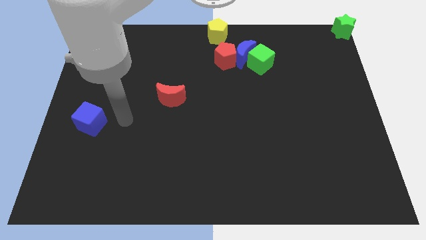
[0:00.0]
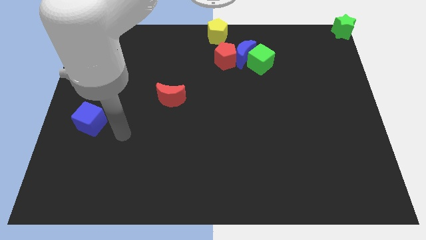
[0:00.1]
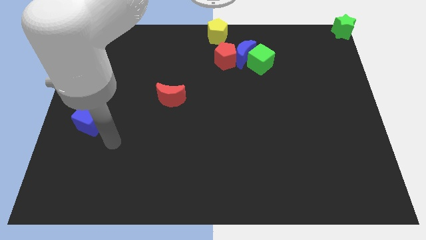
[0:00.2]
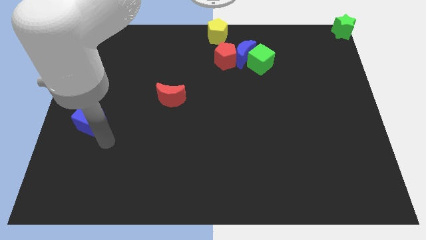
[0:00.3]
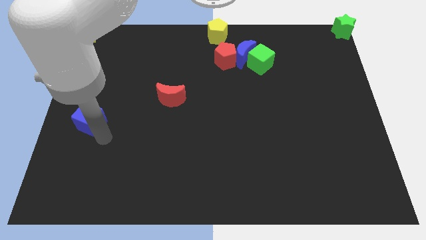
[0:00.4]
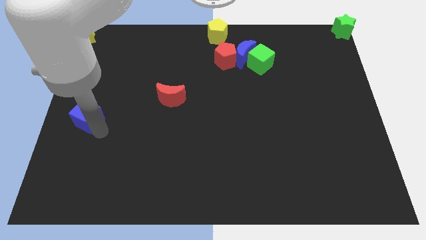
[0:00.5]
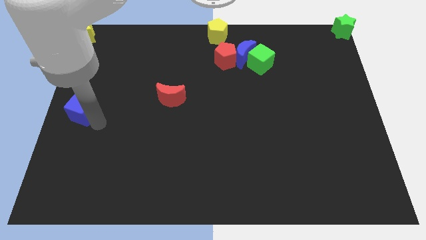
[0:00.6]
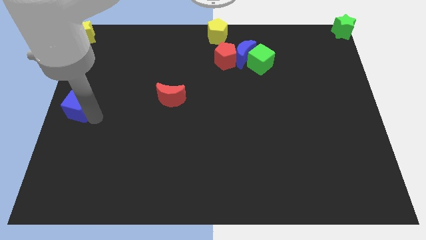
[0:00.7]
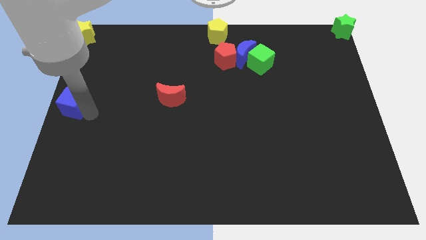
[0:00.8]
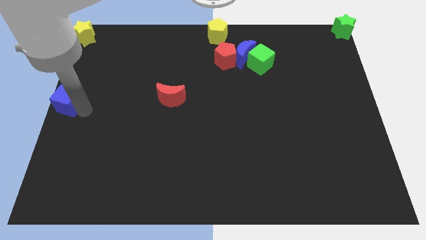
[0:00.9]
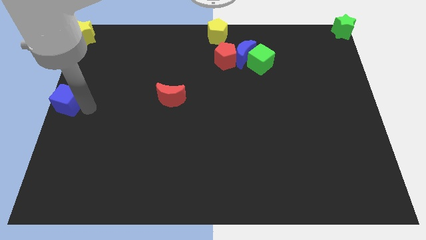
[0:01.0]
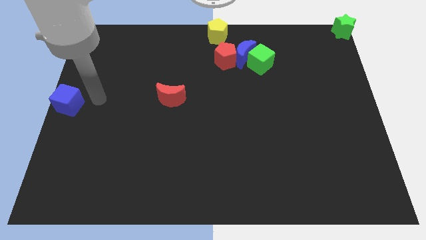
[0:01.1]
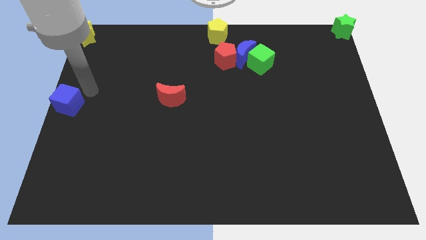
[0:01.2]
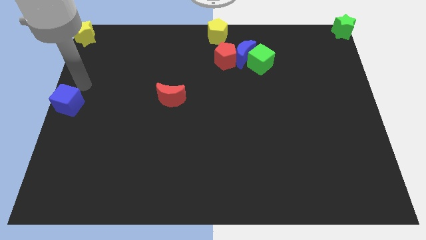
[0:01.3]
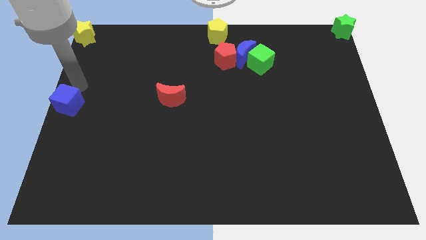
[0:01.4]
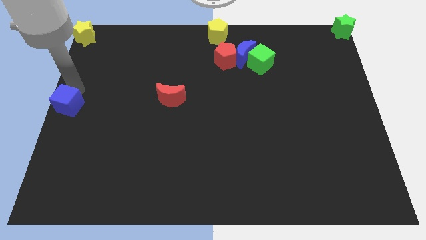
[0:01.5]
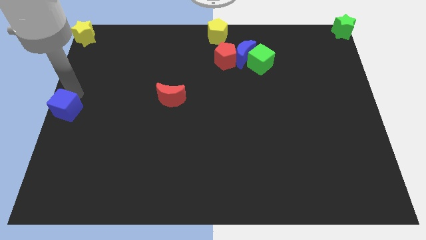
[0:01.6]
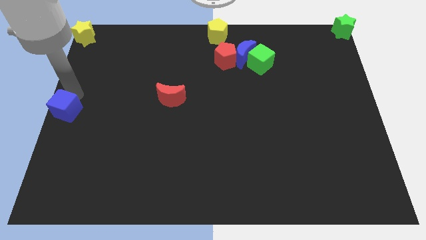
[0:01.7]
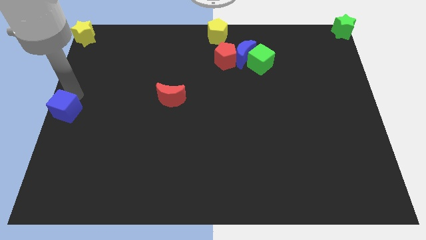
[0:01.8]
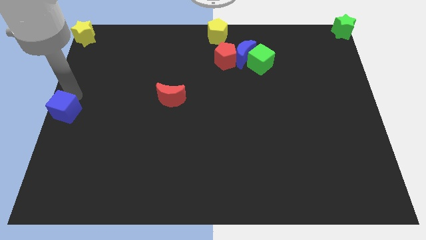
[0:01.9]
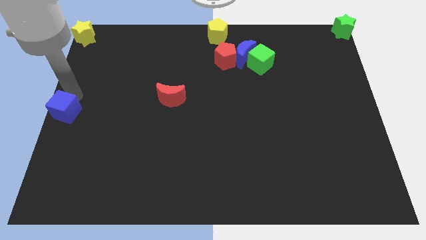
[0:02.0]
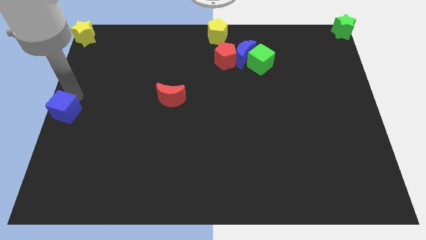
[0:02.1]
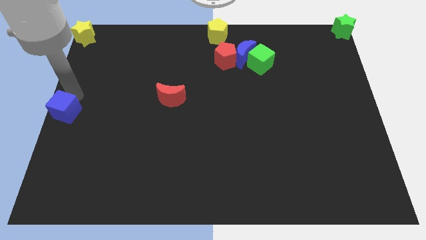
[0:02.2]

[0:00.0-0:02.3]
push the blue cube to the left center of the board

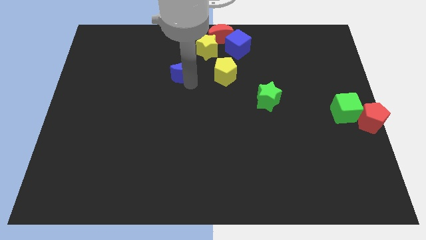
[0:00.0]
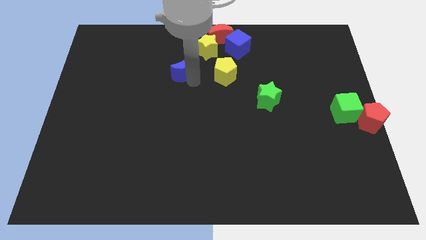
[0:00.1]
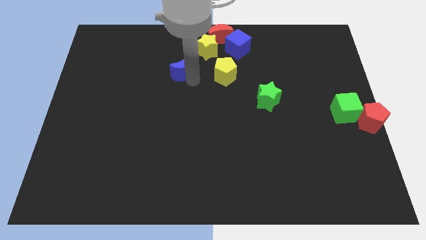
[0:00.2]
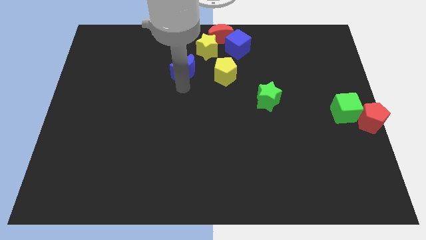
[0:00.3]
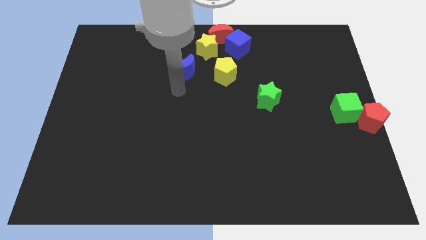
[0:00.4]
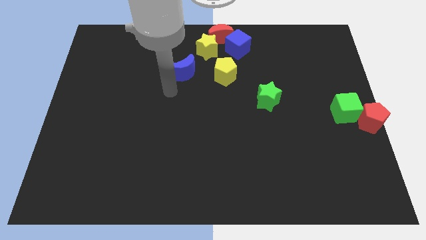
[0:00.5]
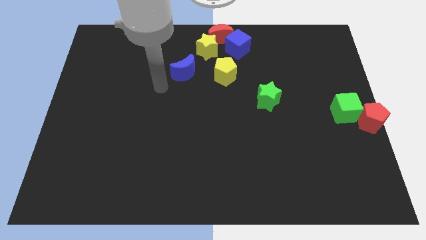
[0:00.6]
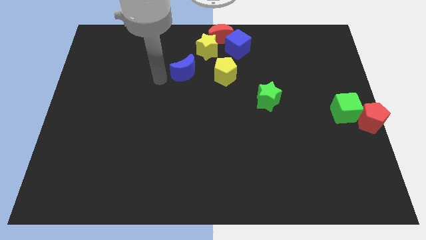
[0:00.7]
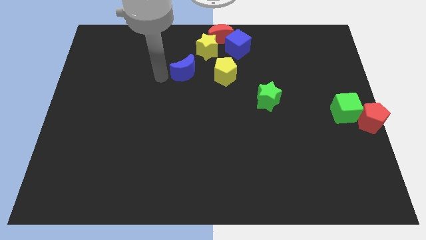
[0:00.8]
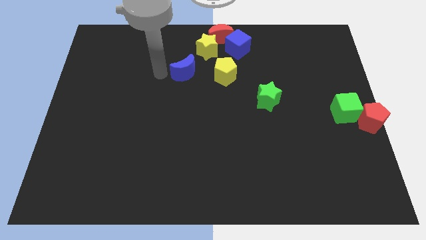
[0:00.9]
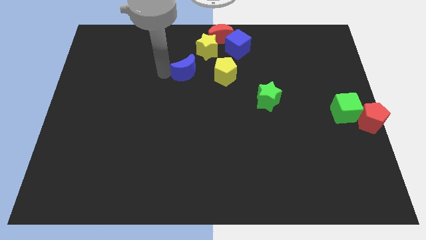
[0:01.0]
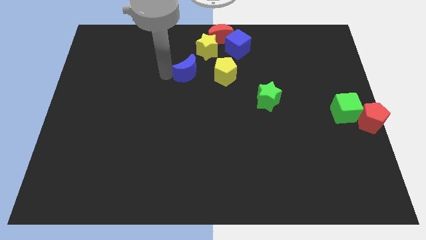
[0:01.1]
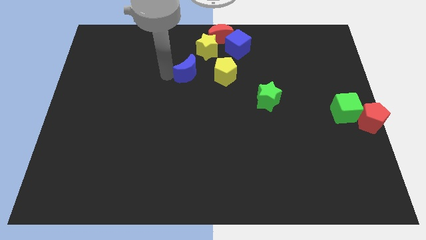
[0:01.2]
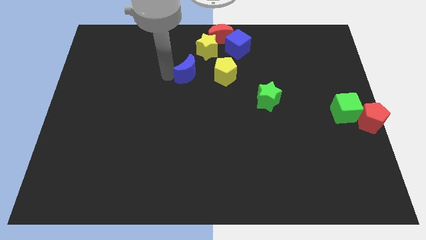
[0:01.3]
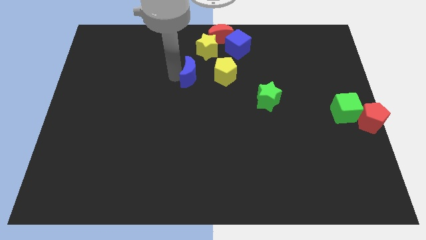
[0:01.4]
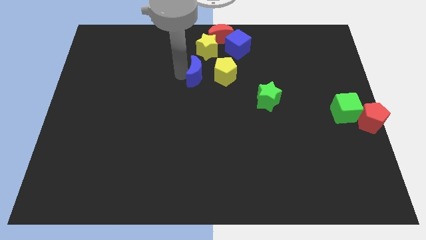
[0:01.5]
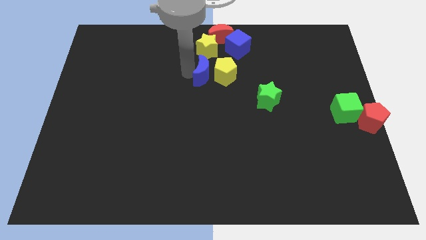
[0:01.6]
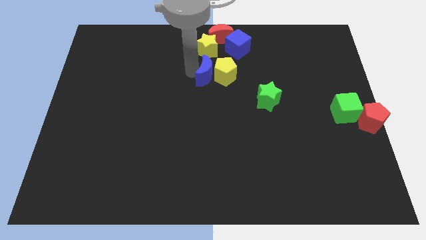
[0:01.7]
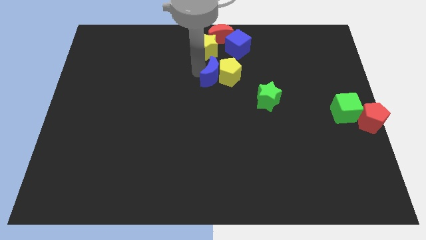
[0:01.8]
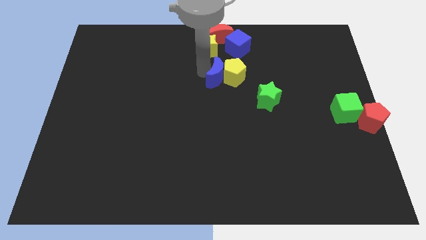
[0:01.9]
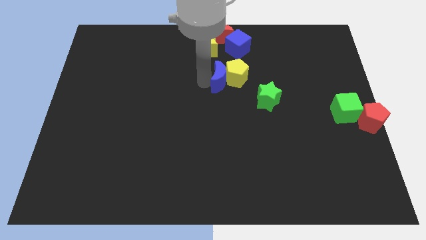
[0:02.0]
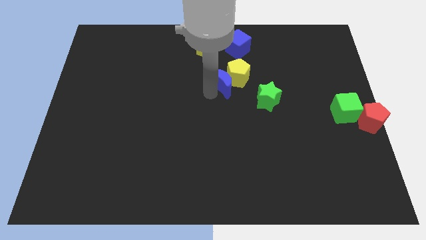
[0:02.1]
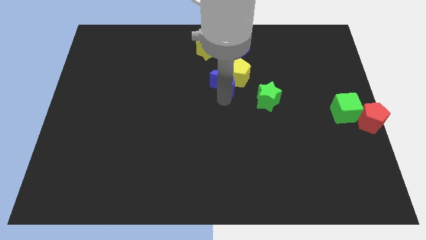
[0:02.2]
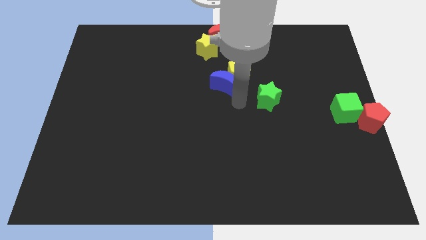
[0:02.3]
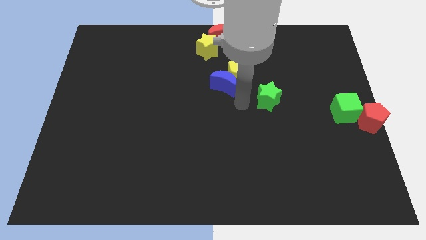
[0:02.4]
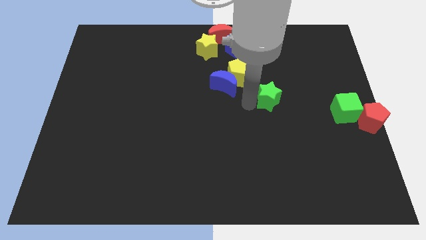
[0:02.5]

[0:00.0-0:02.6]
move the blue crescent to the bottom left to the yellow pentagon

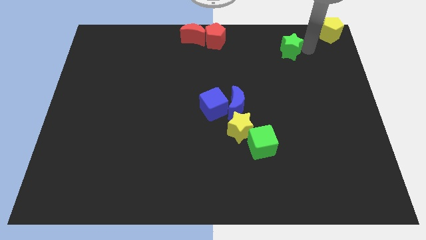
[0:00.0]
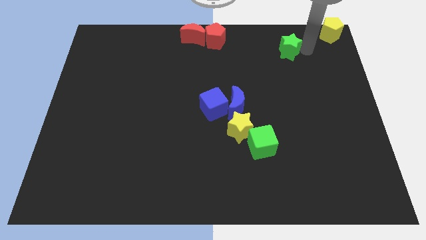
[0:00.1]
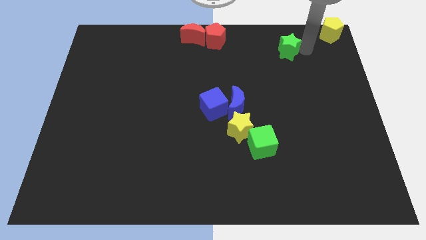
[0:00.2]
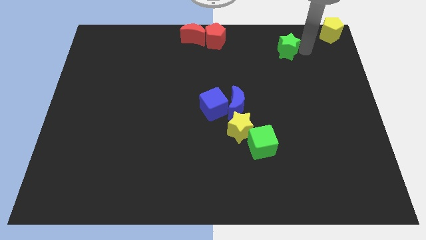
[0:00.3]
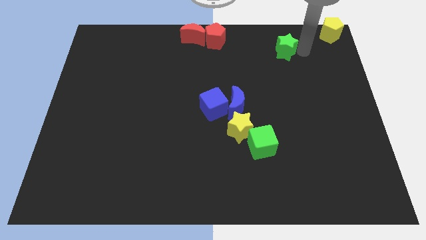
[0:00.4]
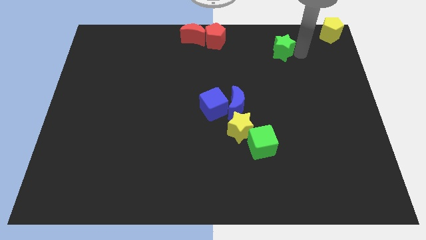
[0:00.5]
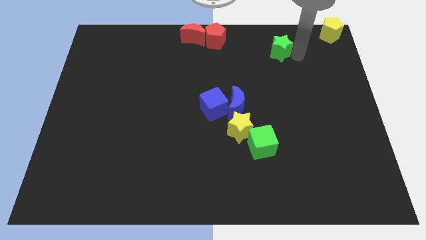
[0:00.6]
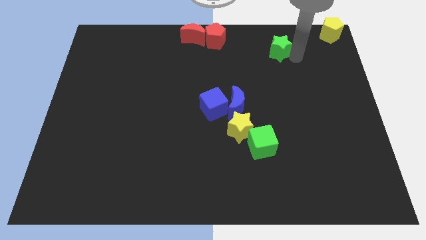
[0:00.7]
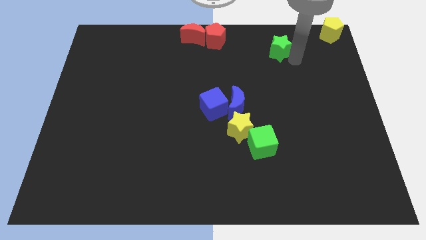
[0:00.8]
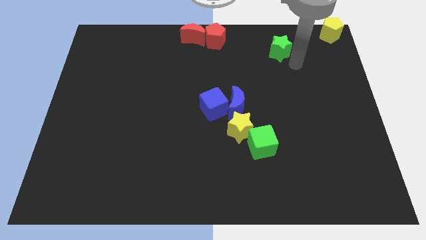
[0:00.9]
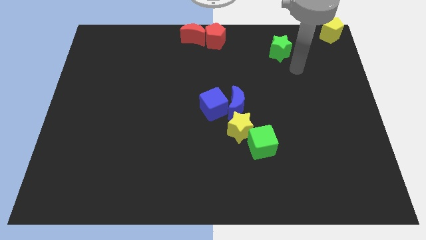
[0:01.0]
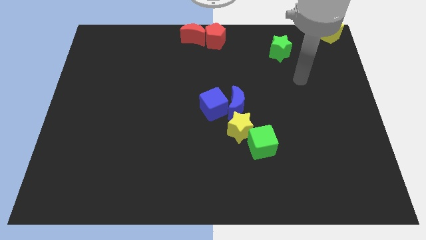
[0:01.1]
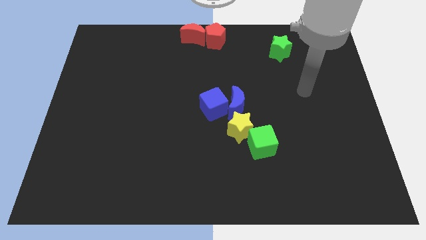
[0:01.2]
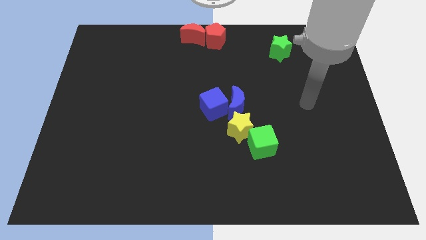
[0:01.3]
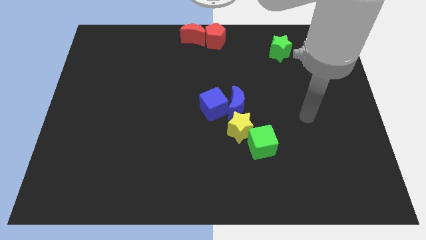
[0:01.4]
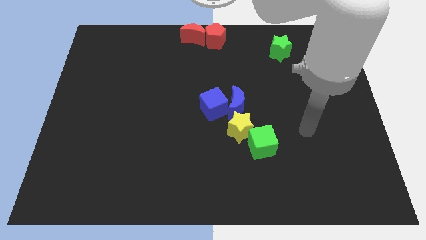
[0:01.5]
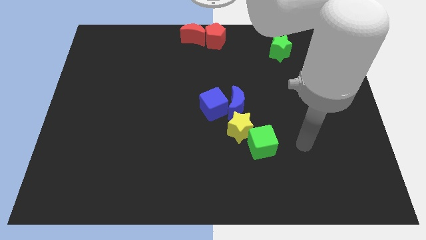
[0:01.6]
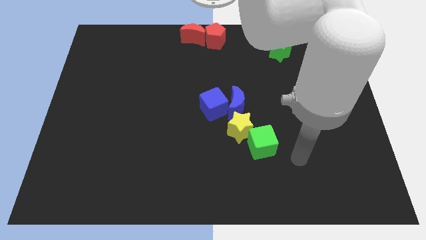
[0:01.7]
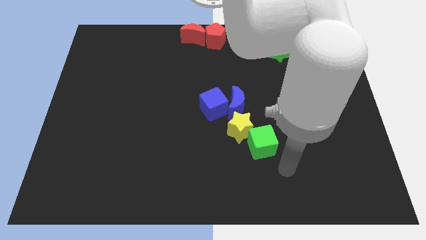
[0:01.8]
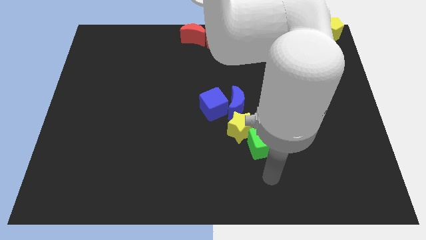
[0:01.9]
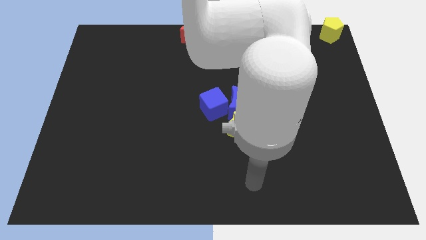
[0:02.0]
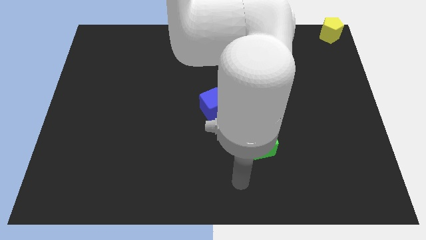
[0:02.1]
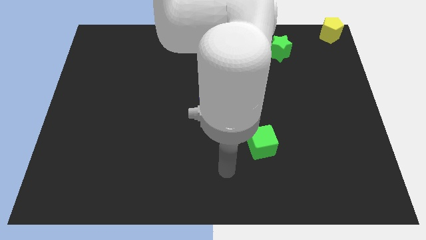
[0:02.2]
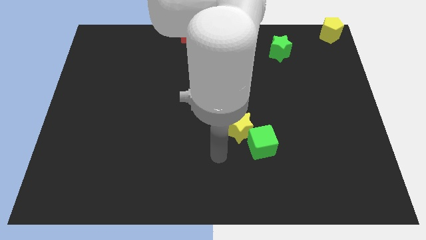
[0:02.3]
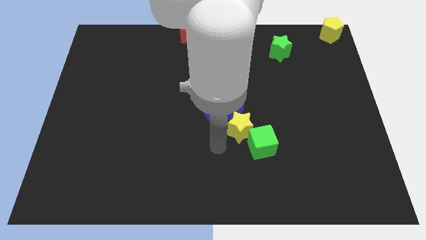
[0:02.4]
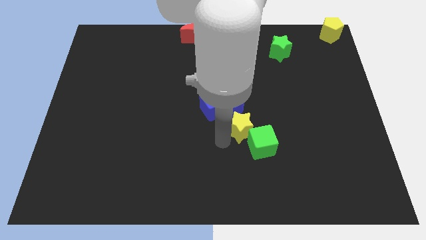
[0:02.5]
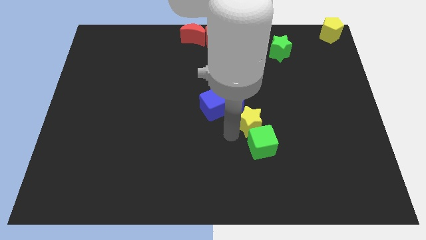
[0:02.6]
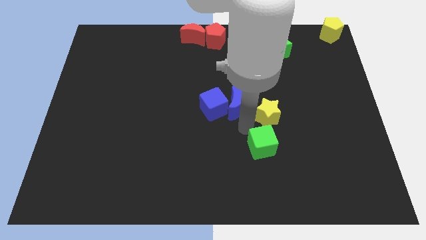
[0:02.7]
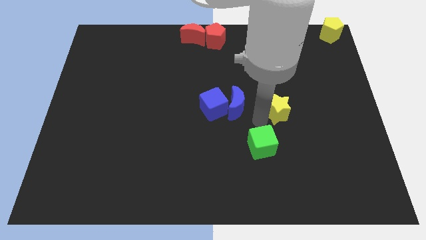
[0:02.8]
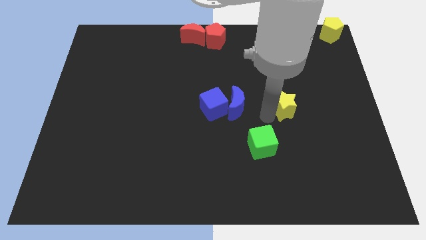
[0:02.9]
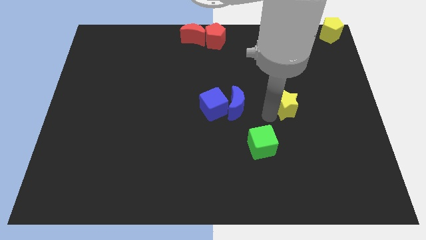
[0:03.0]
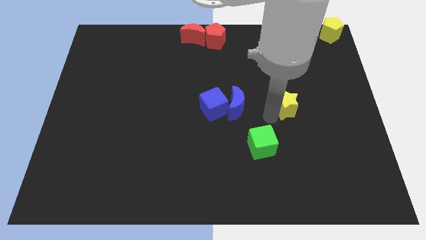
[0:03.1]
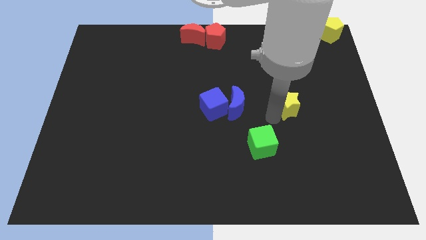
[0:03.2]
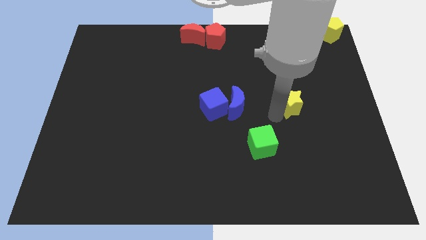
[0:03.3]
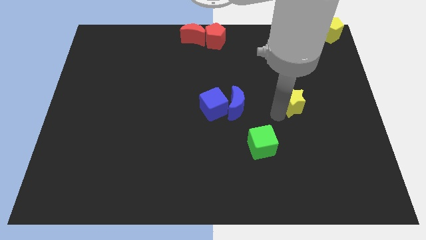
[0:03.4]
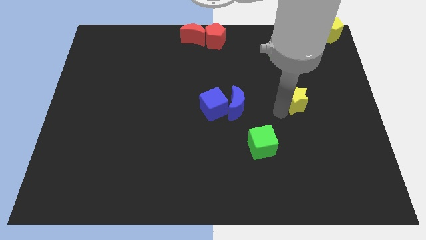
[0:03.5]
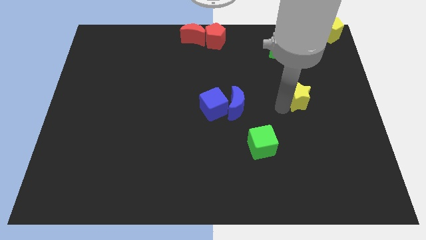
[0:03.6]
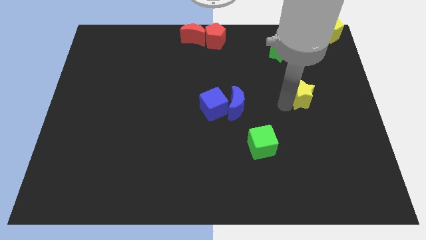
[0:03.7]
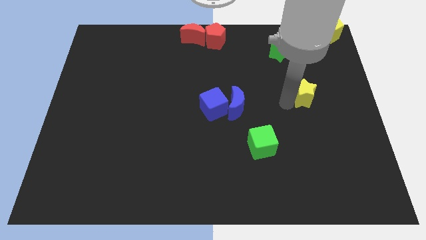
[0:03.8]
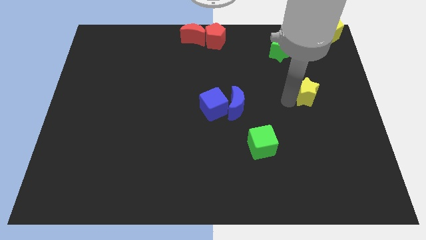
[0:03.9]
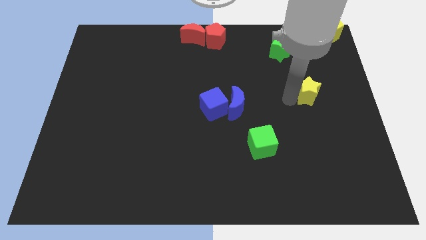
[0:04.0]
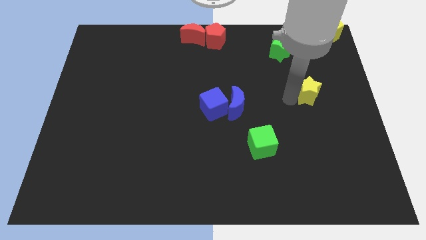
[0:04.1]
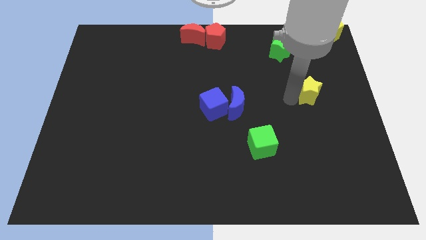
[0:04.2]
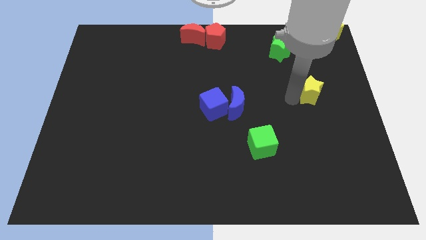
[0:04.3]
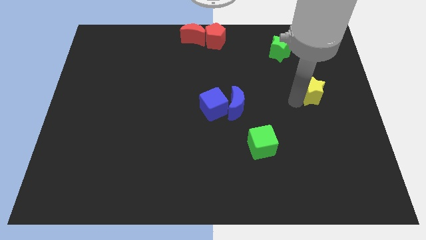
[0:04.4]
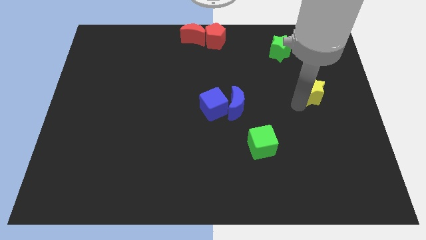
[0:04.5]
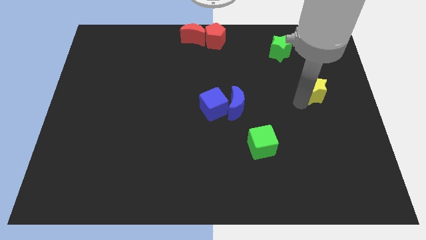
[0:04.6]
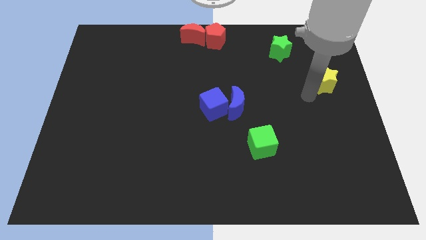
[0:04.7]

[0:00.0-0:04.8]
place the yellow star diagonally to the green star
